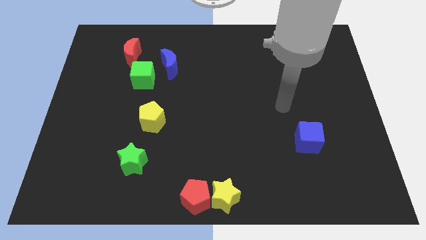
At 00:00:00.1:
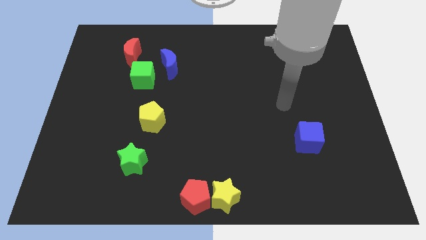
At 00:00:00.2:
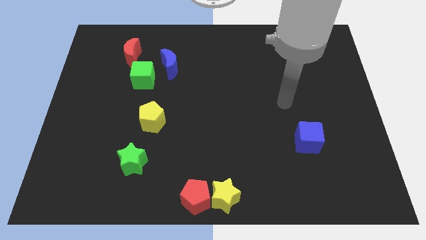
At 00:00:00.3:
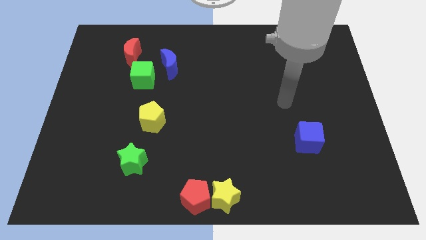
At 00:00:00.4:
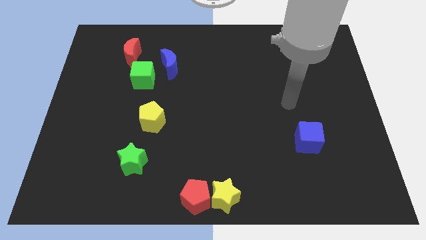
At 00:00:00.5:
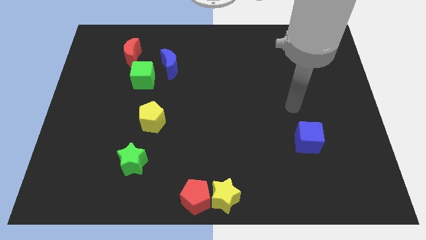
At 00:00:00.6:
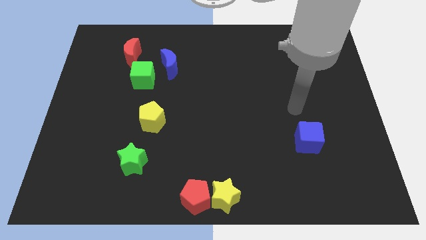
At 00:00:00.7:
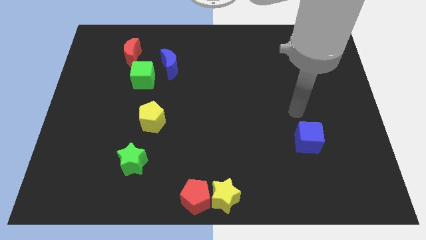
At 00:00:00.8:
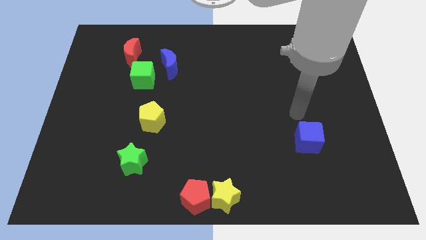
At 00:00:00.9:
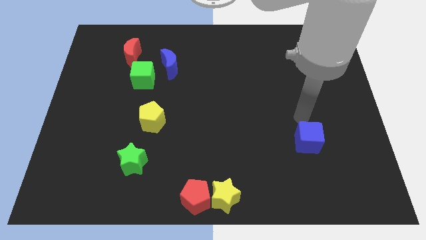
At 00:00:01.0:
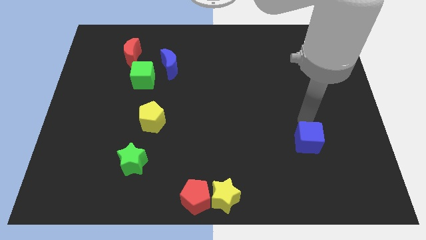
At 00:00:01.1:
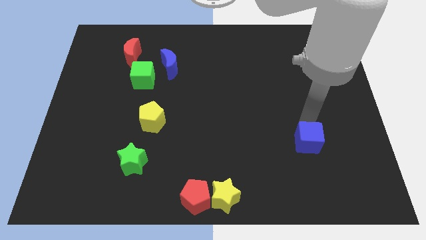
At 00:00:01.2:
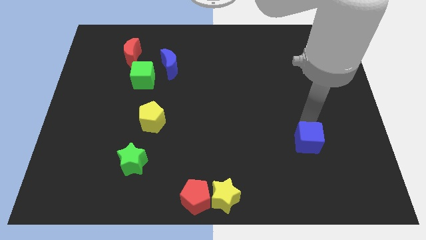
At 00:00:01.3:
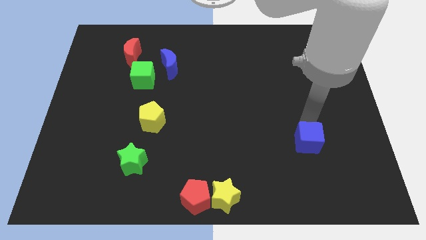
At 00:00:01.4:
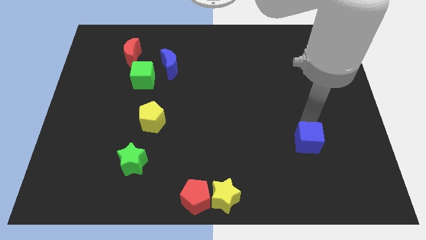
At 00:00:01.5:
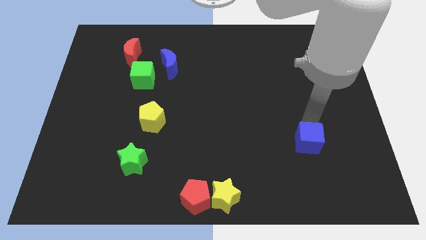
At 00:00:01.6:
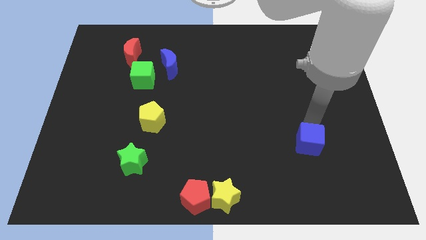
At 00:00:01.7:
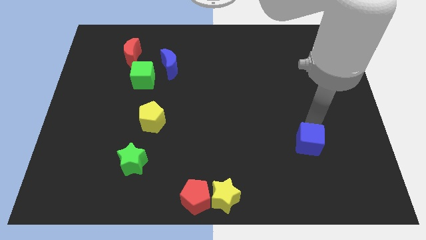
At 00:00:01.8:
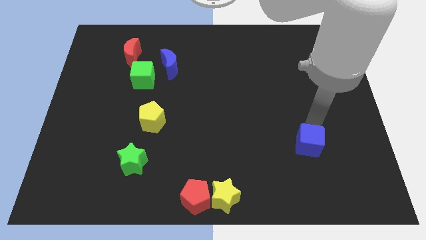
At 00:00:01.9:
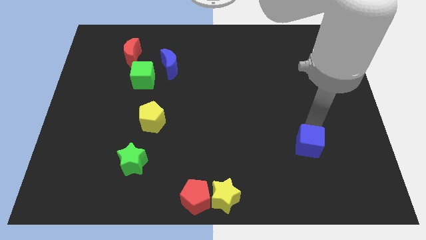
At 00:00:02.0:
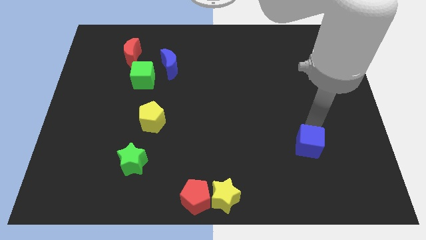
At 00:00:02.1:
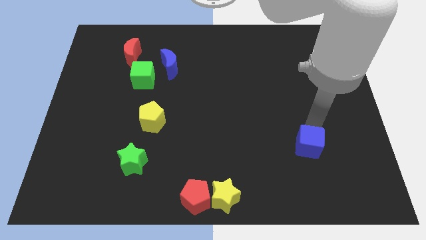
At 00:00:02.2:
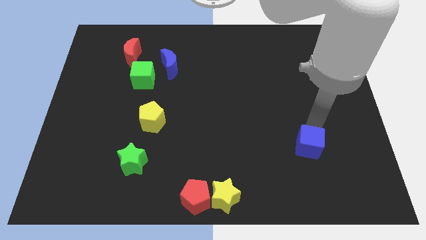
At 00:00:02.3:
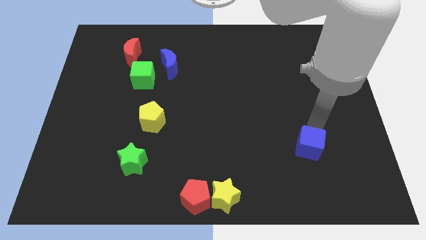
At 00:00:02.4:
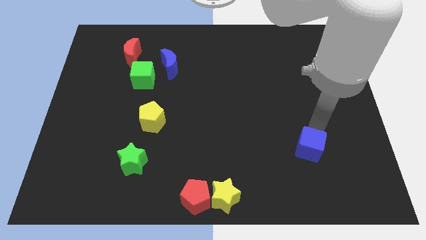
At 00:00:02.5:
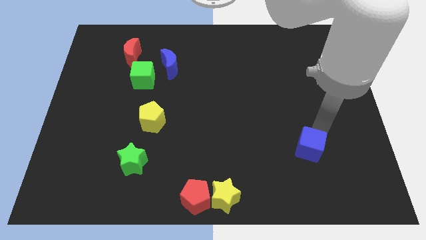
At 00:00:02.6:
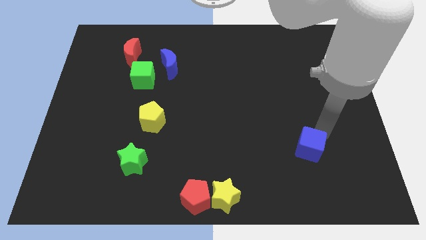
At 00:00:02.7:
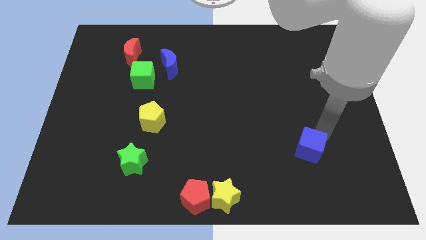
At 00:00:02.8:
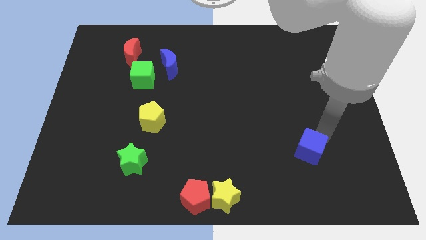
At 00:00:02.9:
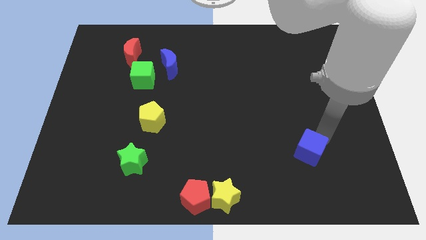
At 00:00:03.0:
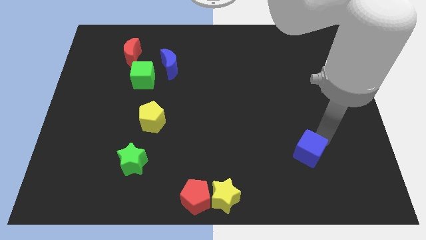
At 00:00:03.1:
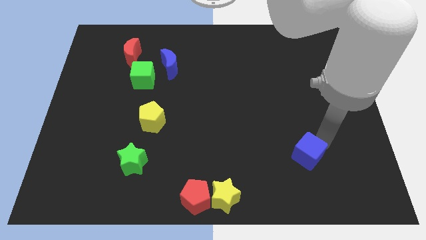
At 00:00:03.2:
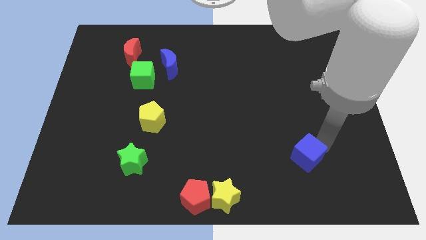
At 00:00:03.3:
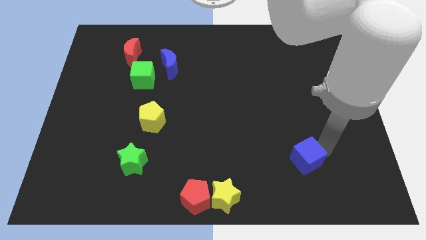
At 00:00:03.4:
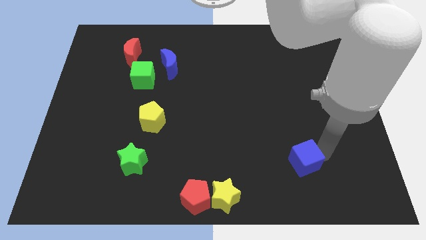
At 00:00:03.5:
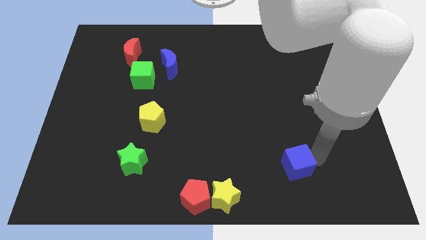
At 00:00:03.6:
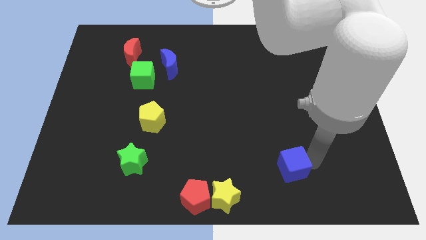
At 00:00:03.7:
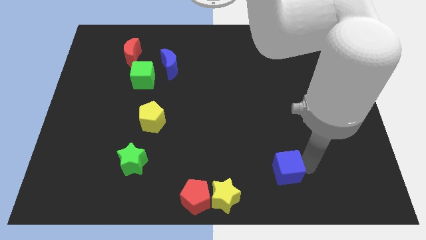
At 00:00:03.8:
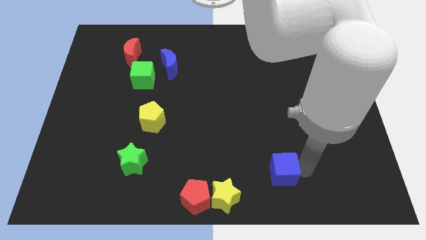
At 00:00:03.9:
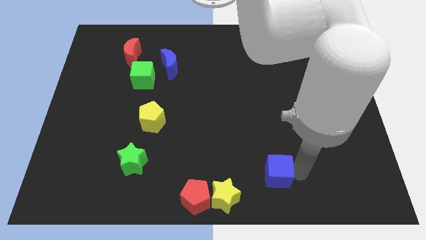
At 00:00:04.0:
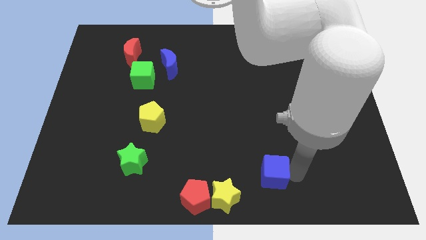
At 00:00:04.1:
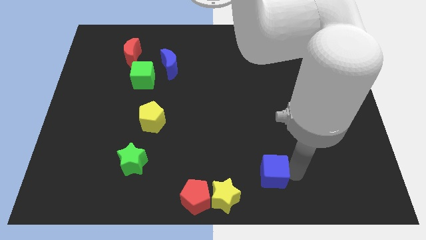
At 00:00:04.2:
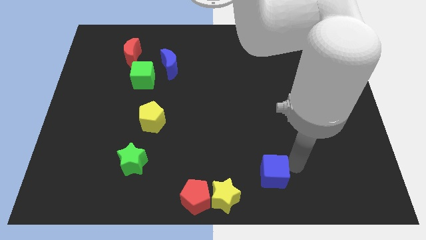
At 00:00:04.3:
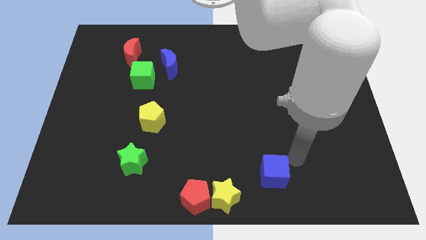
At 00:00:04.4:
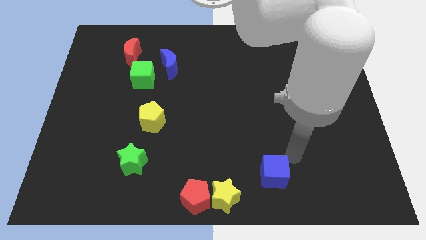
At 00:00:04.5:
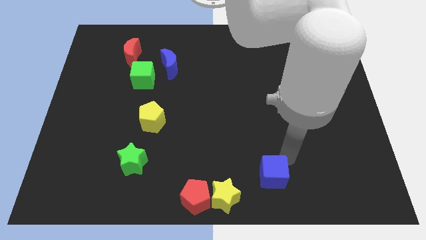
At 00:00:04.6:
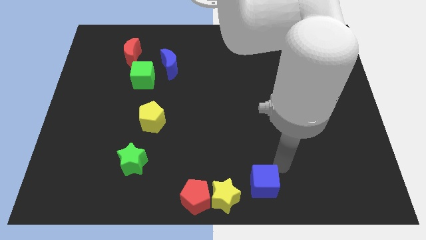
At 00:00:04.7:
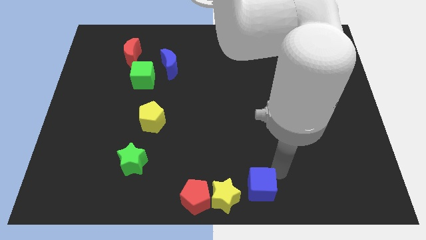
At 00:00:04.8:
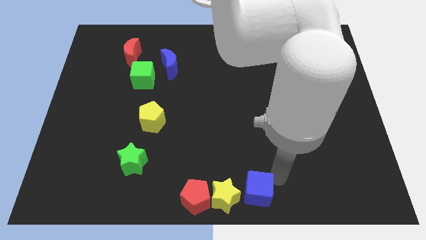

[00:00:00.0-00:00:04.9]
move the blue cube close to the yellow star

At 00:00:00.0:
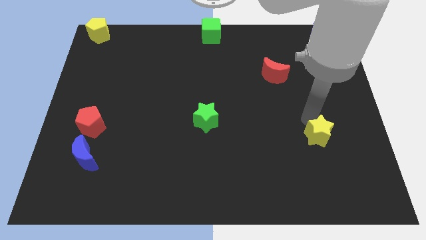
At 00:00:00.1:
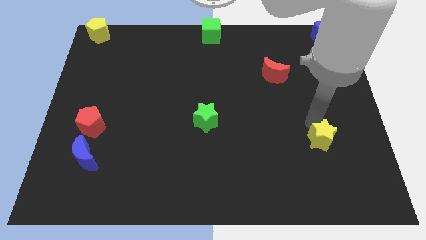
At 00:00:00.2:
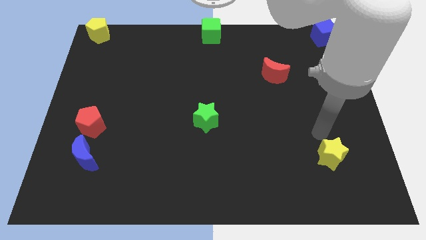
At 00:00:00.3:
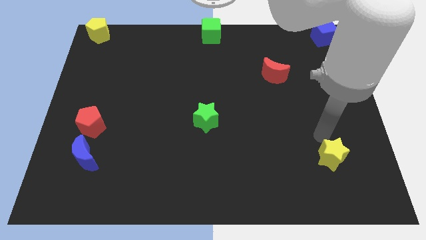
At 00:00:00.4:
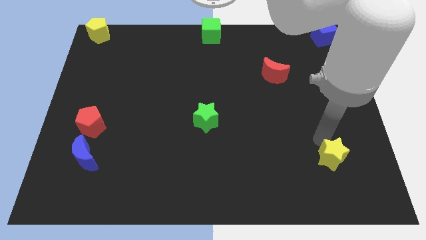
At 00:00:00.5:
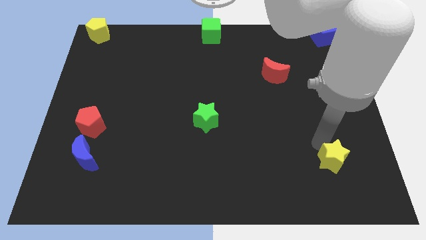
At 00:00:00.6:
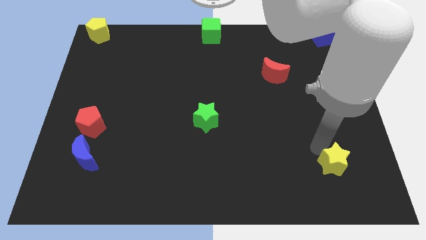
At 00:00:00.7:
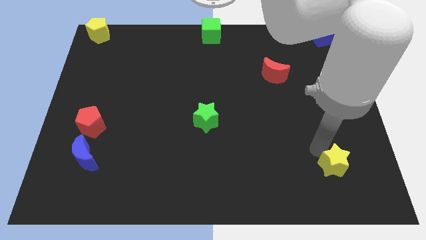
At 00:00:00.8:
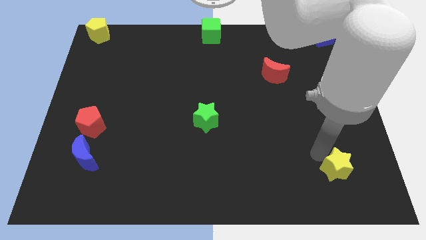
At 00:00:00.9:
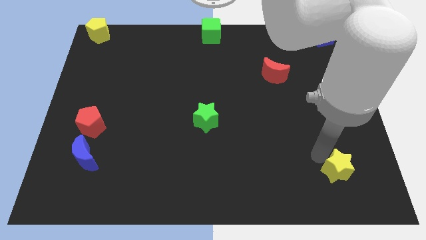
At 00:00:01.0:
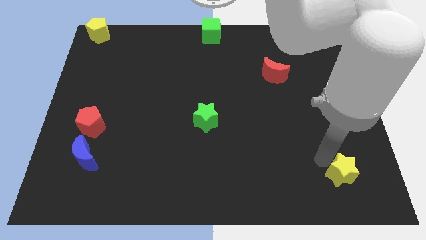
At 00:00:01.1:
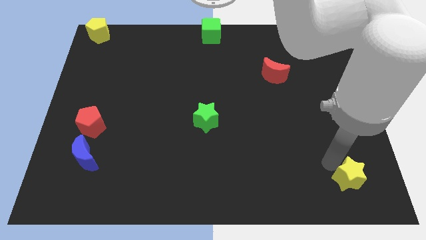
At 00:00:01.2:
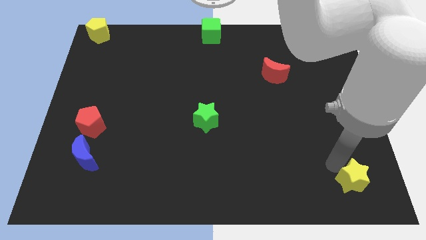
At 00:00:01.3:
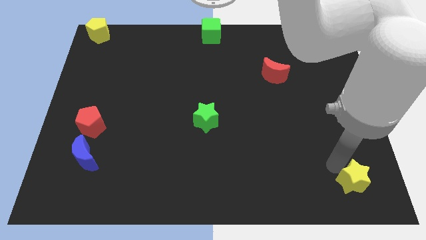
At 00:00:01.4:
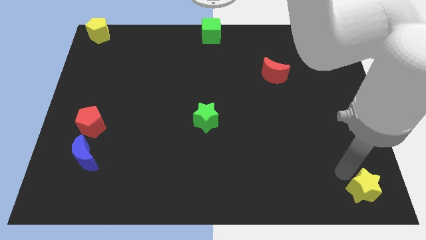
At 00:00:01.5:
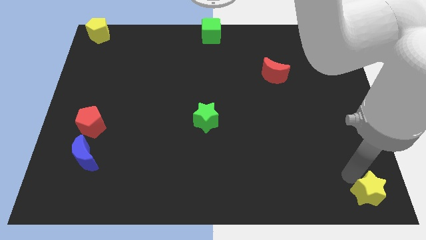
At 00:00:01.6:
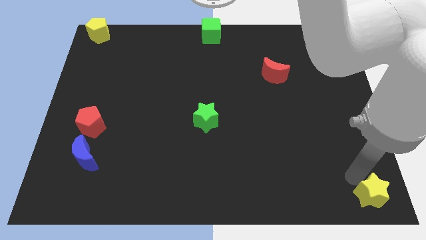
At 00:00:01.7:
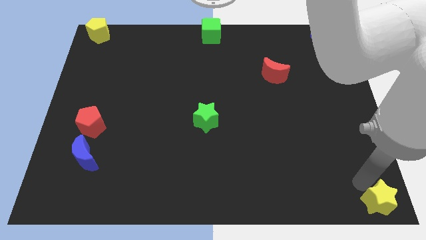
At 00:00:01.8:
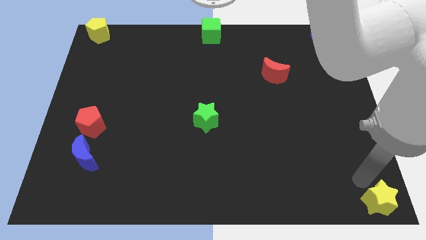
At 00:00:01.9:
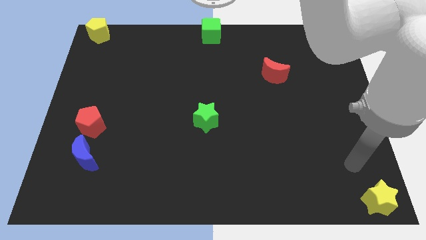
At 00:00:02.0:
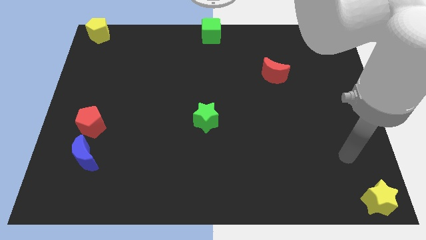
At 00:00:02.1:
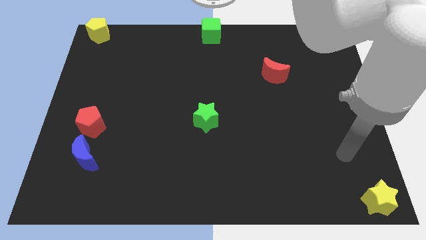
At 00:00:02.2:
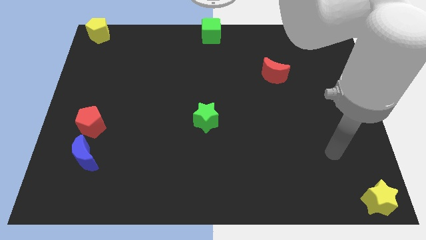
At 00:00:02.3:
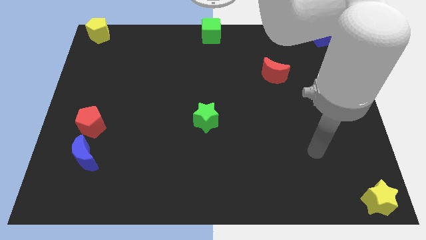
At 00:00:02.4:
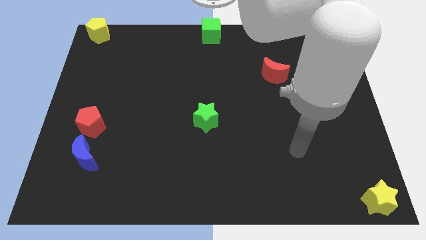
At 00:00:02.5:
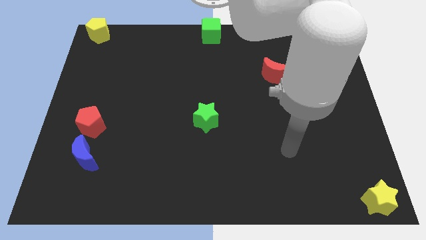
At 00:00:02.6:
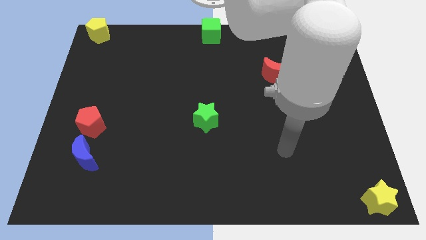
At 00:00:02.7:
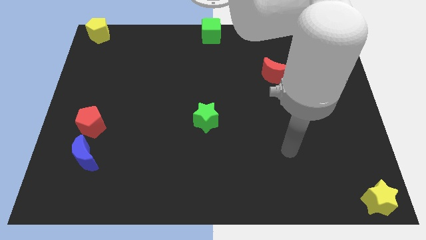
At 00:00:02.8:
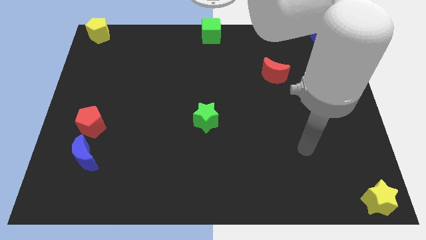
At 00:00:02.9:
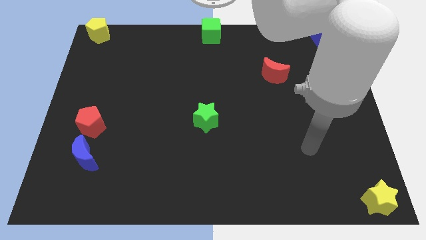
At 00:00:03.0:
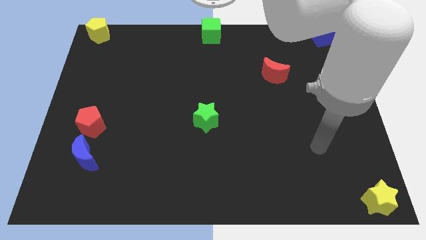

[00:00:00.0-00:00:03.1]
place the yellow star to the bottom right

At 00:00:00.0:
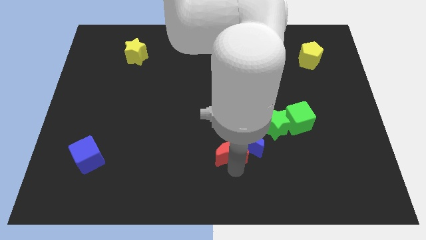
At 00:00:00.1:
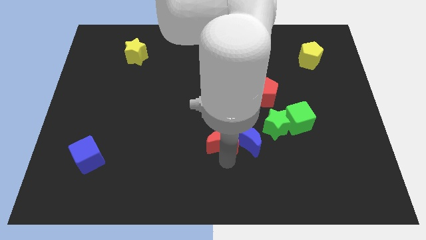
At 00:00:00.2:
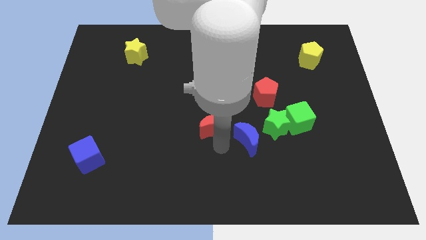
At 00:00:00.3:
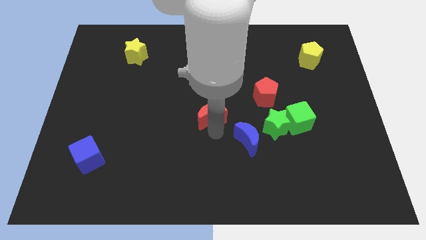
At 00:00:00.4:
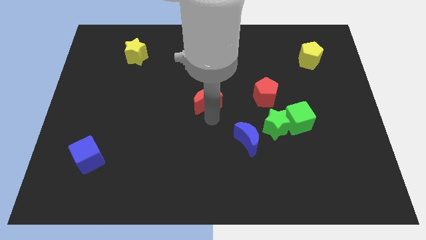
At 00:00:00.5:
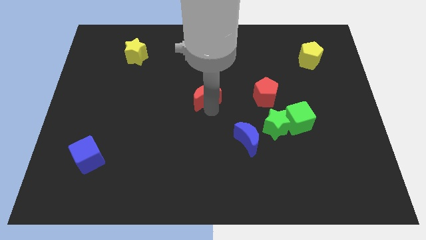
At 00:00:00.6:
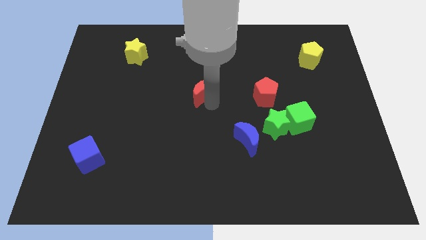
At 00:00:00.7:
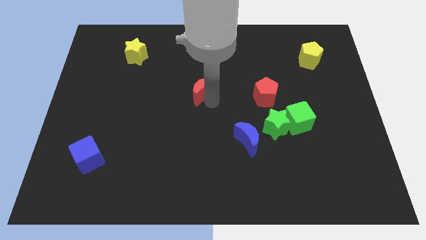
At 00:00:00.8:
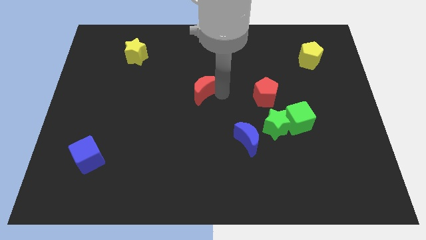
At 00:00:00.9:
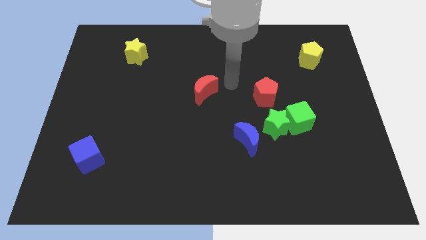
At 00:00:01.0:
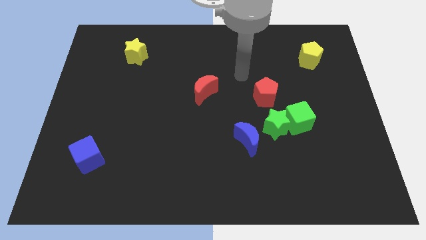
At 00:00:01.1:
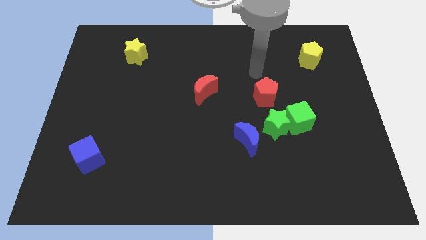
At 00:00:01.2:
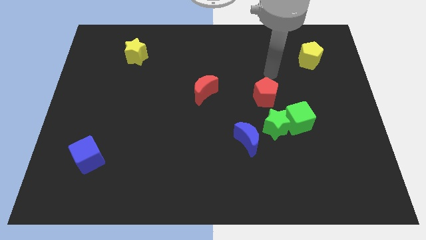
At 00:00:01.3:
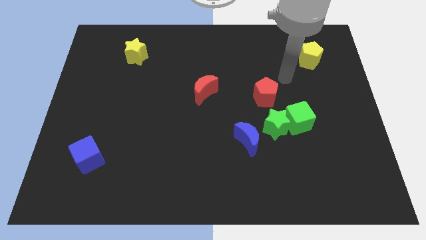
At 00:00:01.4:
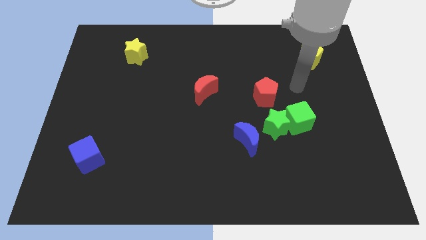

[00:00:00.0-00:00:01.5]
place red moon in the center of the board
